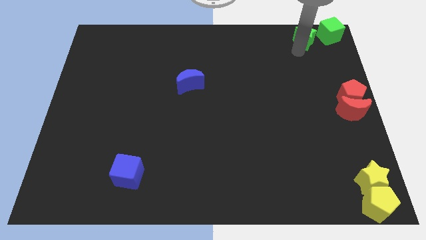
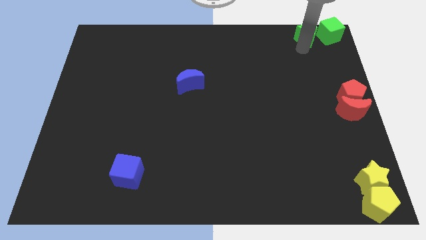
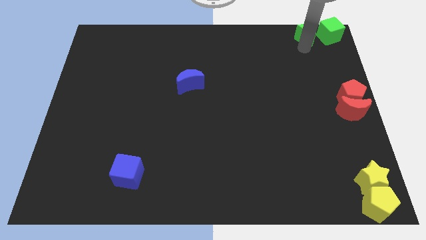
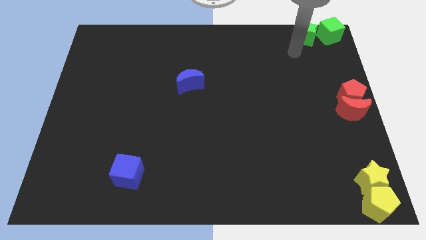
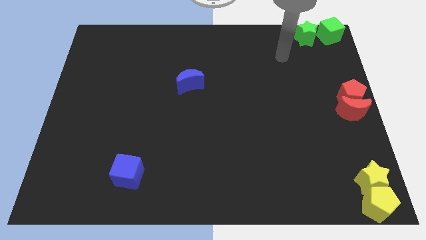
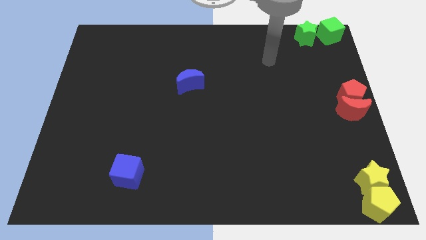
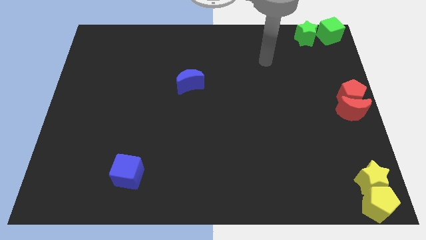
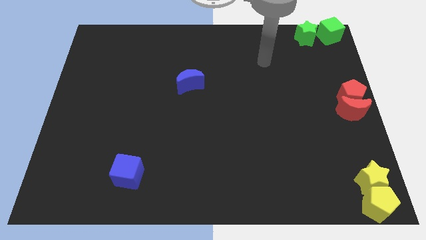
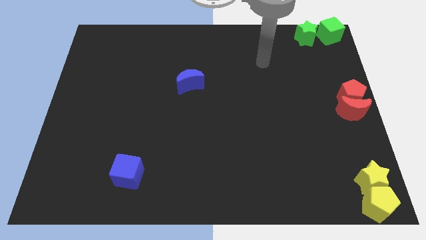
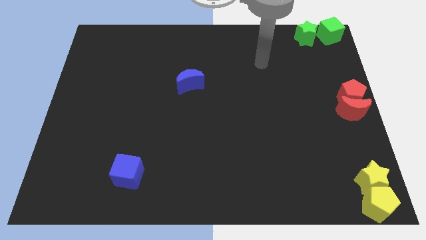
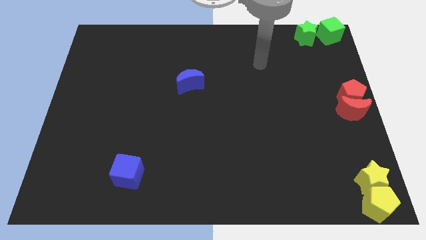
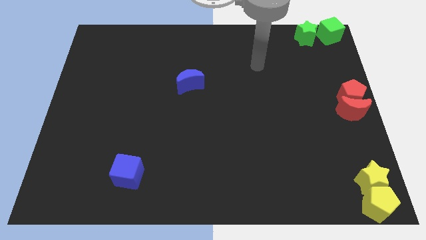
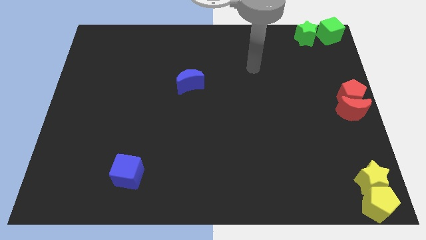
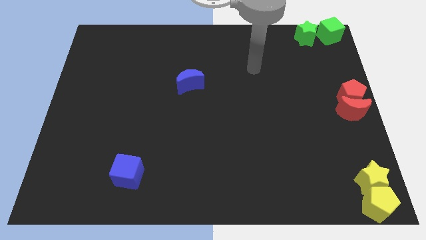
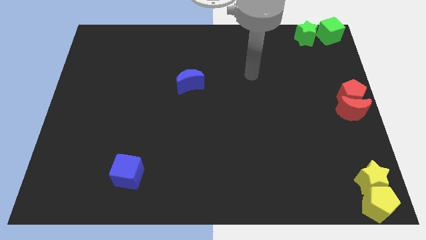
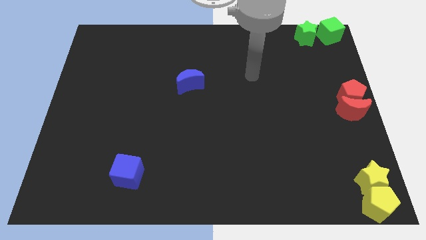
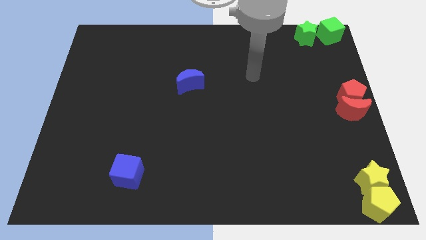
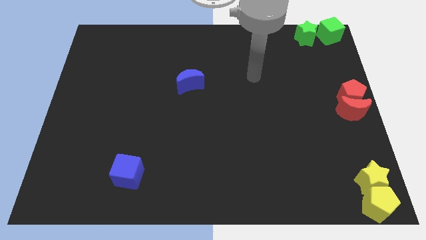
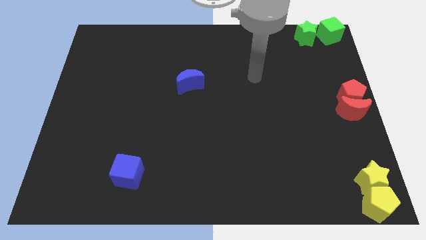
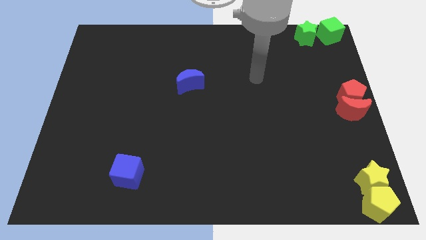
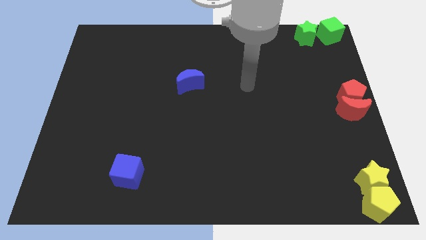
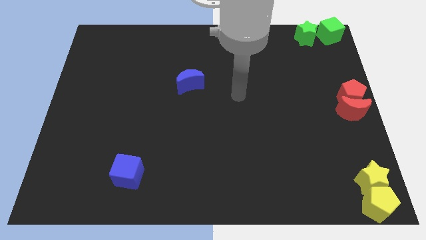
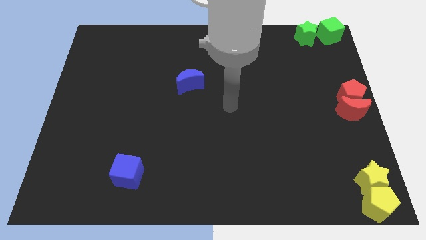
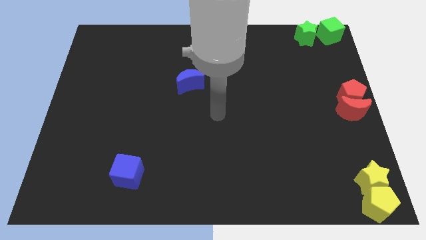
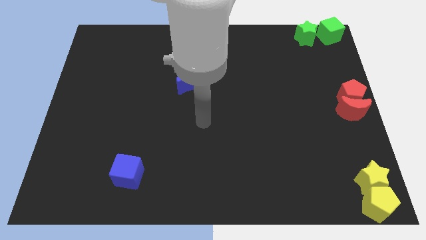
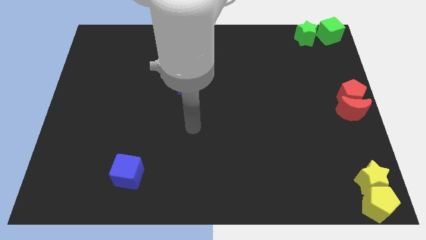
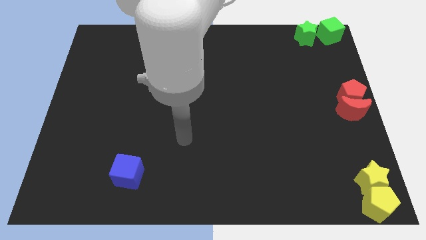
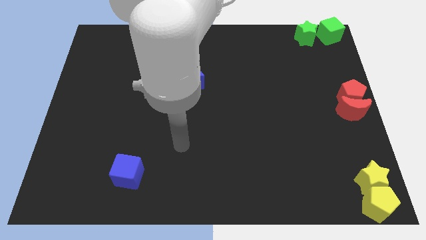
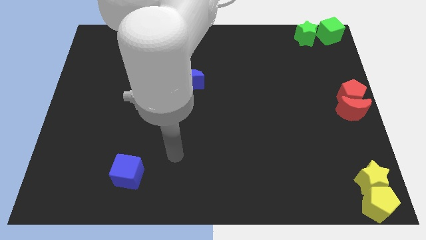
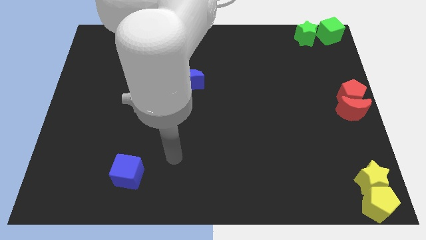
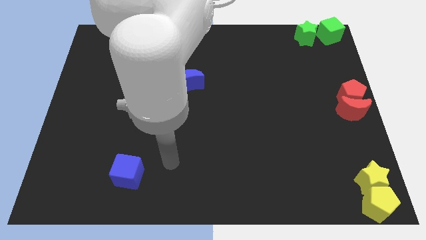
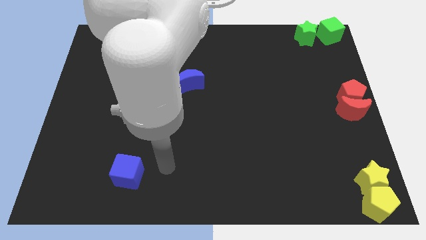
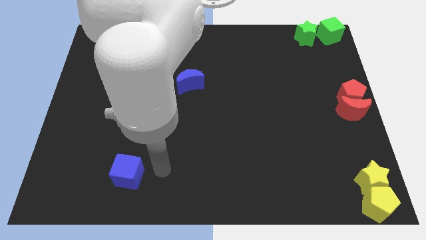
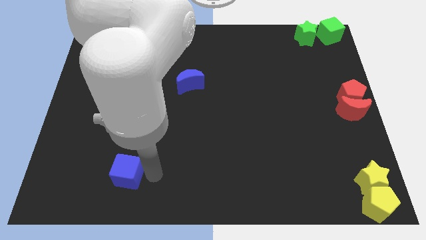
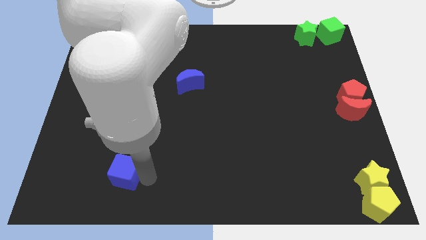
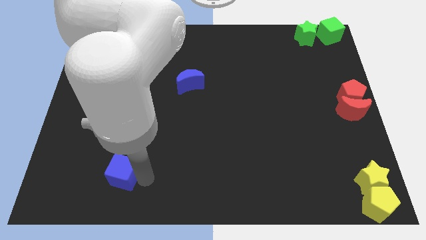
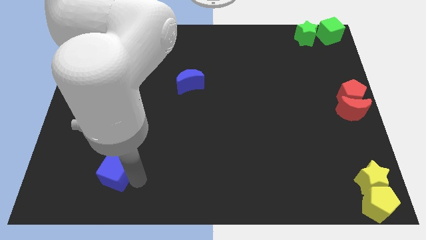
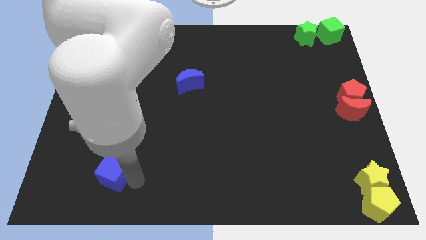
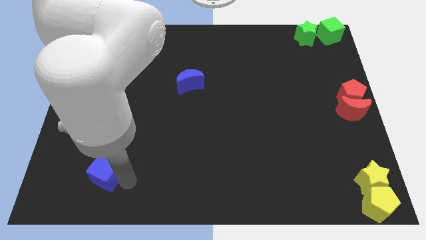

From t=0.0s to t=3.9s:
touch the right of the blue cube

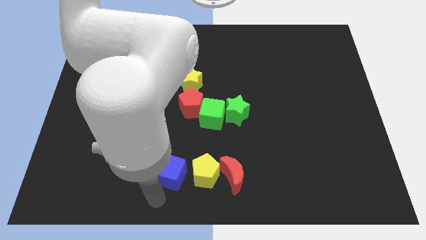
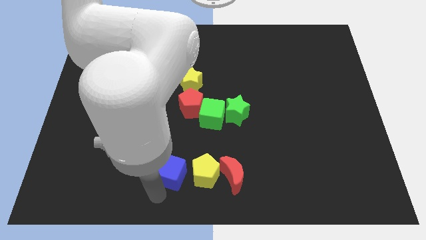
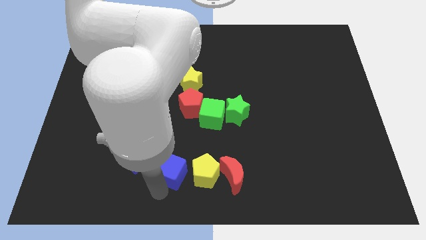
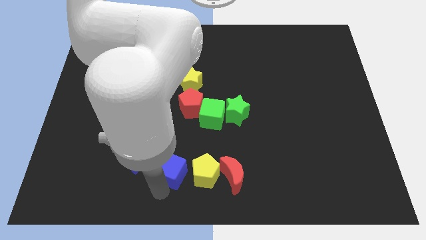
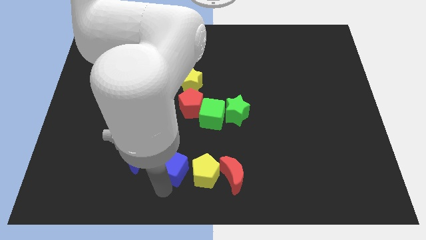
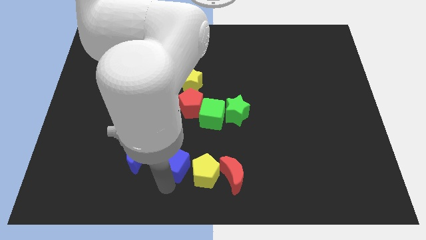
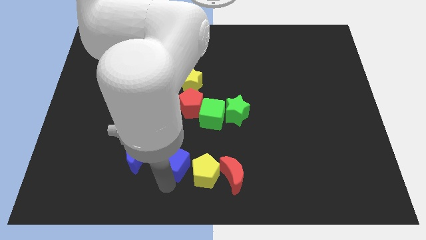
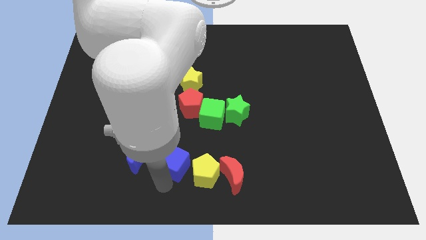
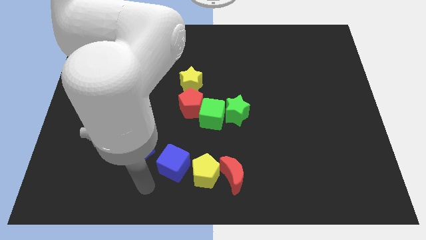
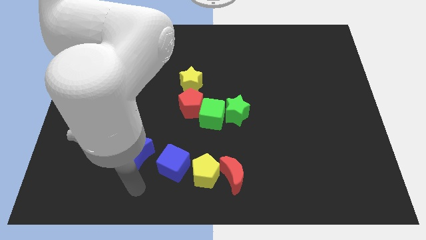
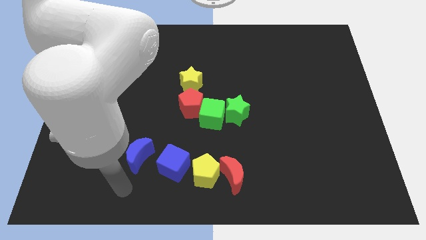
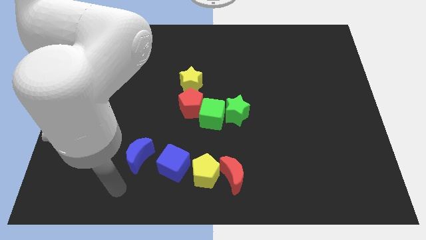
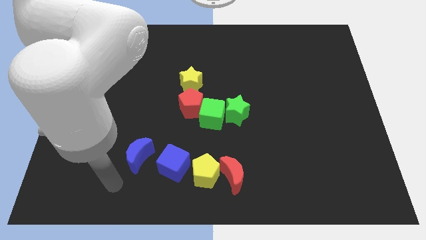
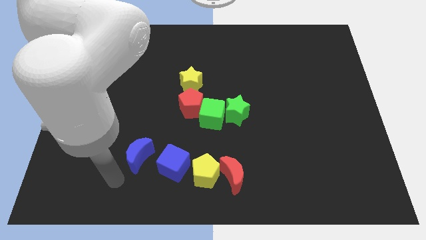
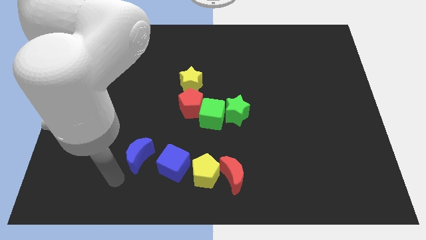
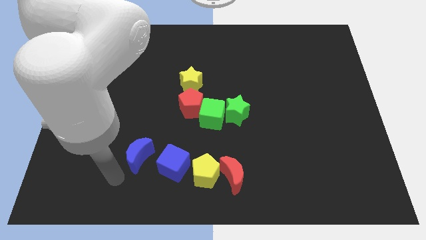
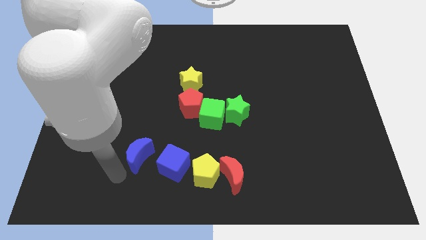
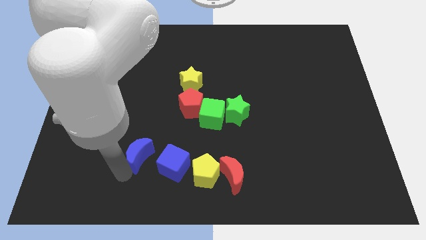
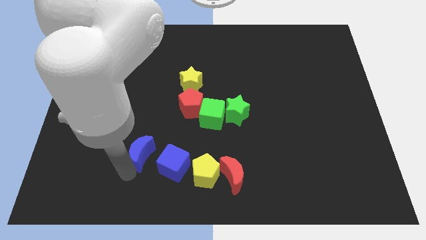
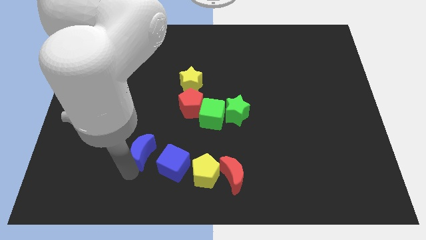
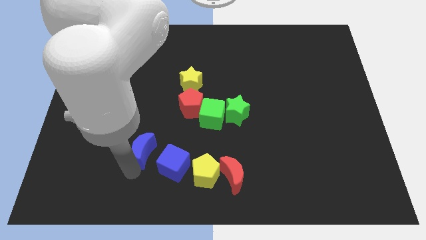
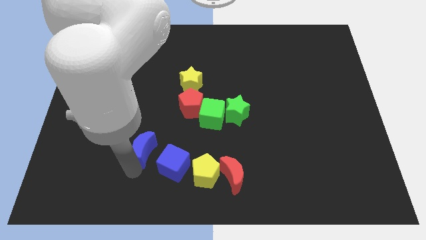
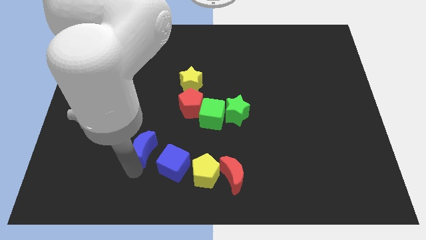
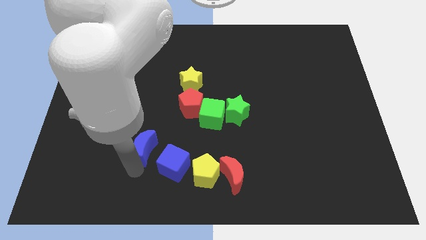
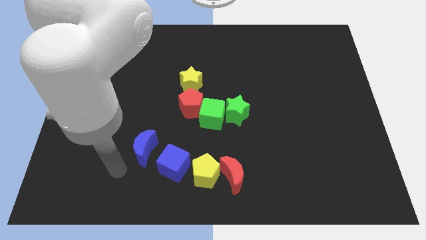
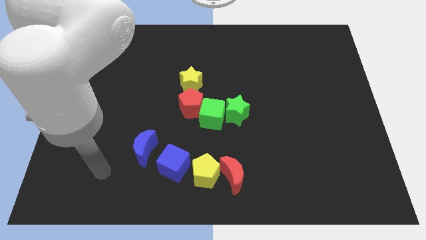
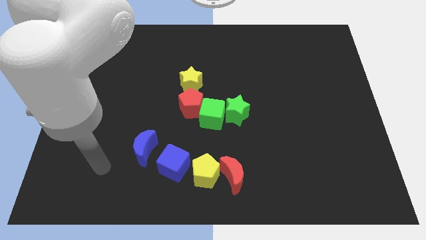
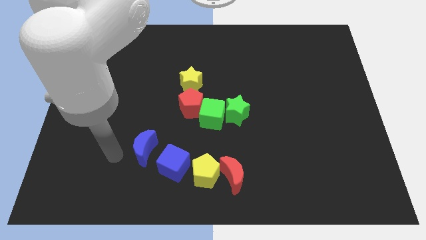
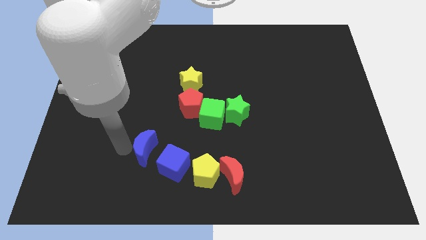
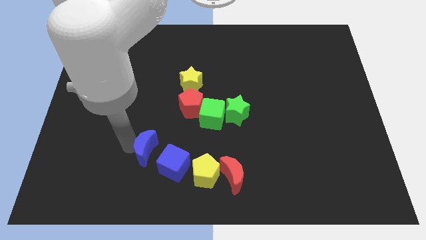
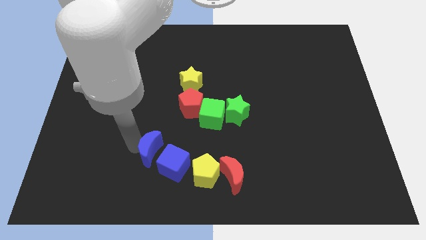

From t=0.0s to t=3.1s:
adjust the blue blocks at the left side of the yellow pentagon

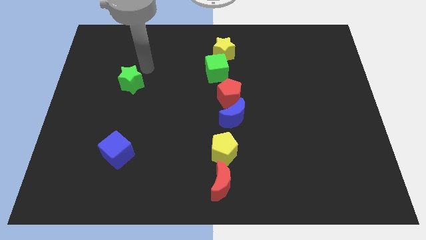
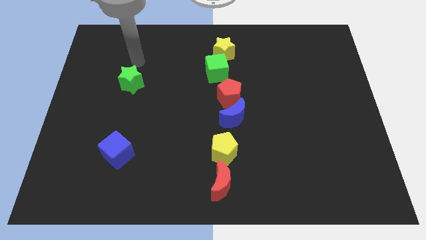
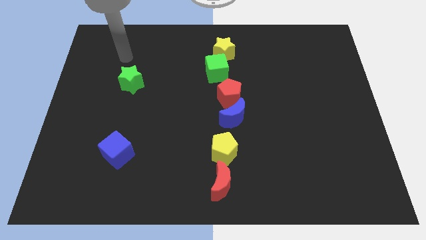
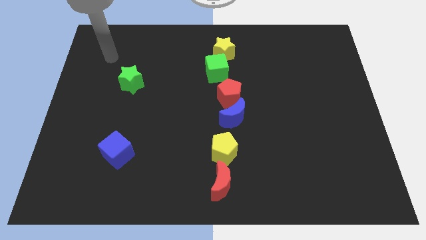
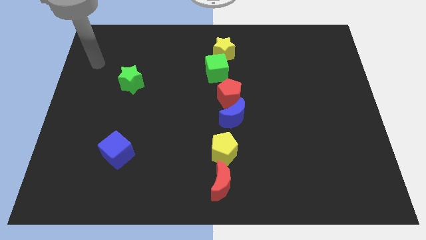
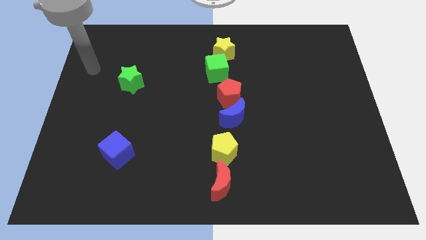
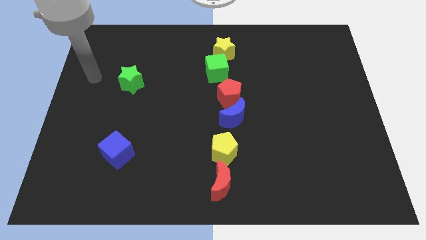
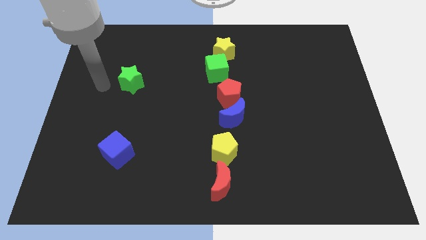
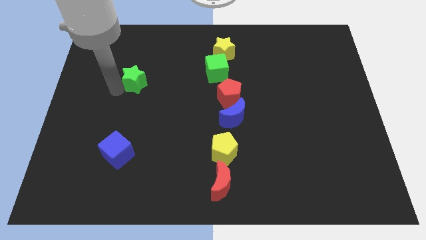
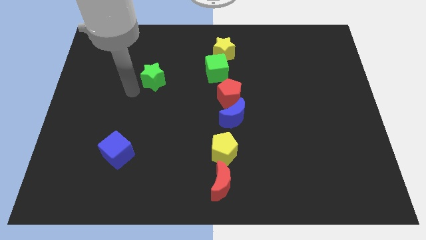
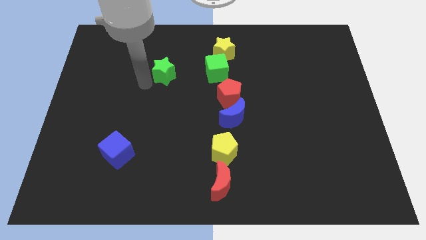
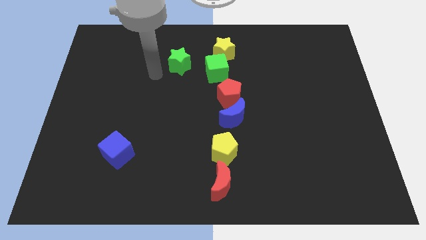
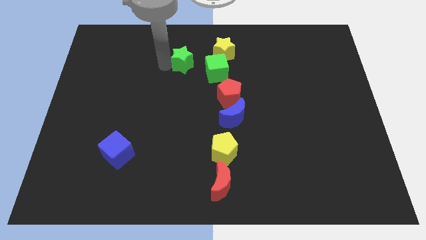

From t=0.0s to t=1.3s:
place the green star diagonally top left of the green cube

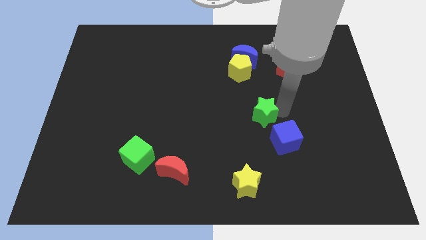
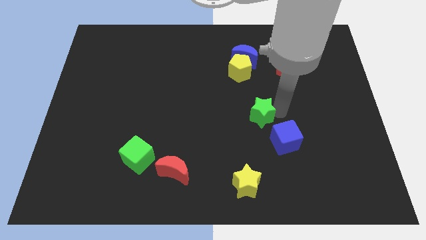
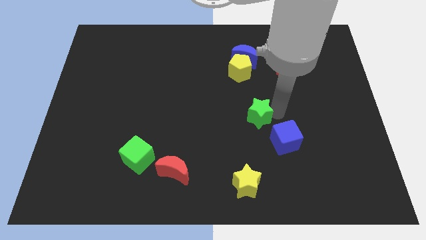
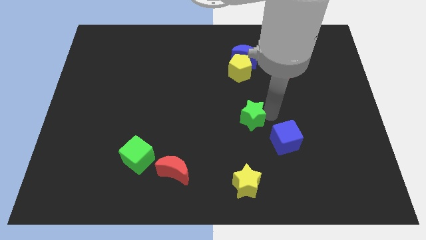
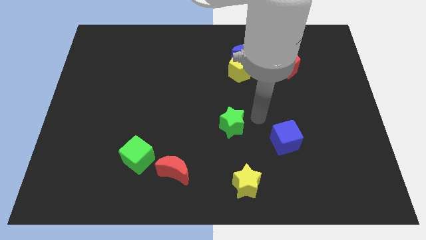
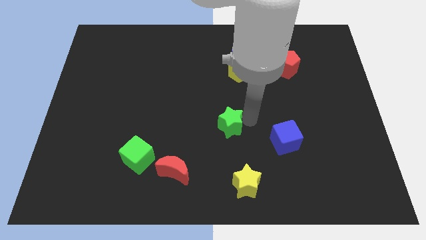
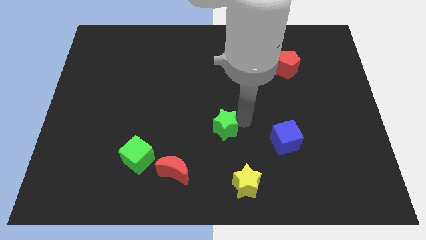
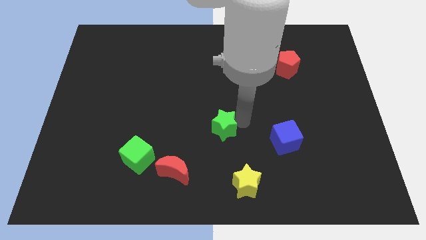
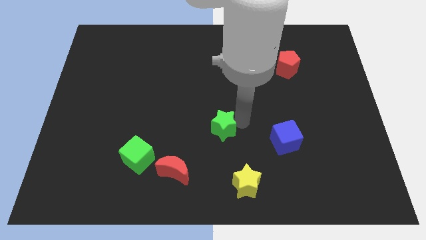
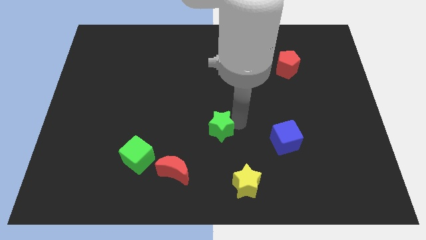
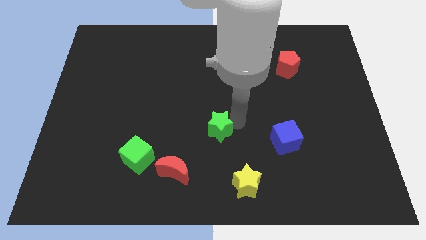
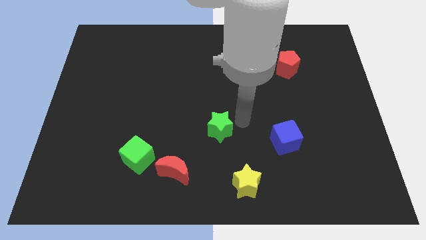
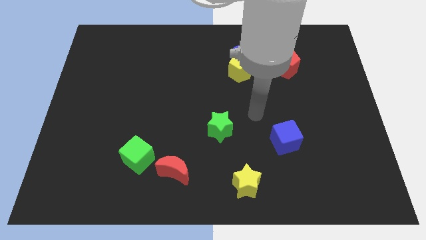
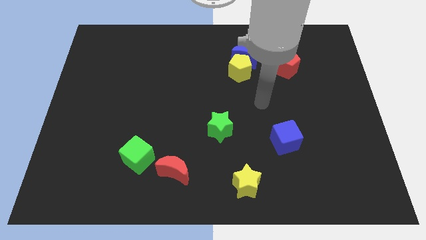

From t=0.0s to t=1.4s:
move green star to the center
